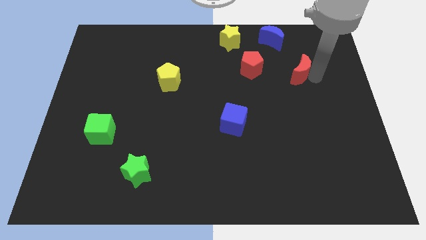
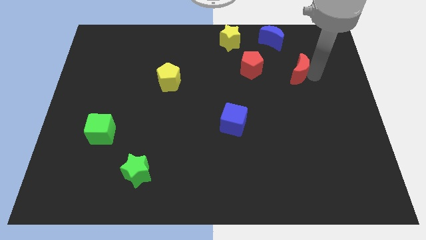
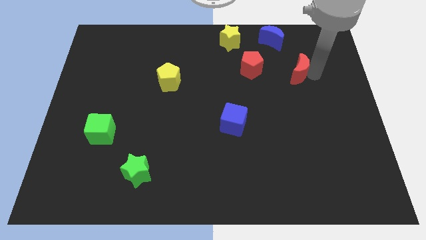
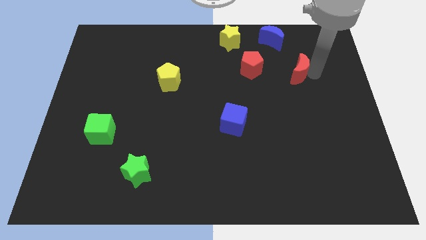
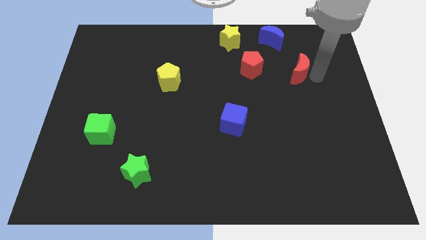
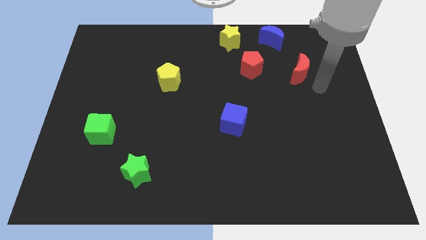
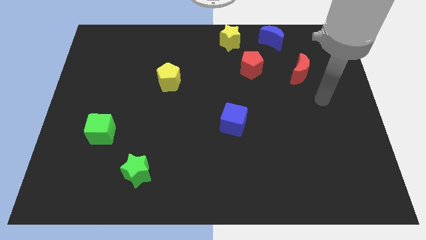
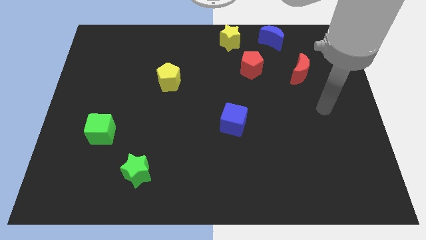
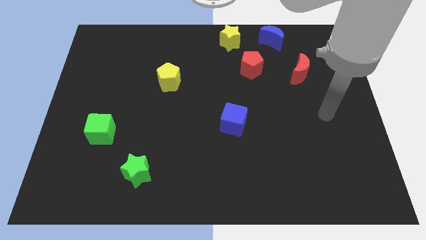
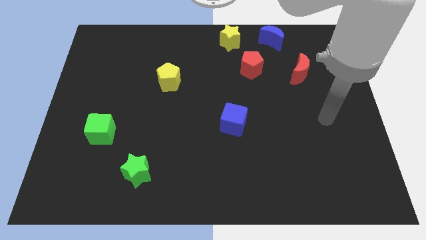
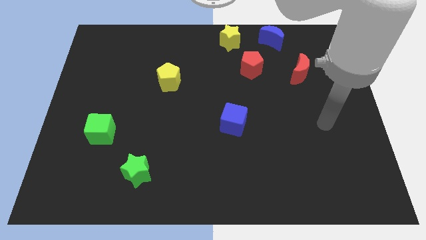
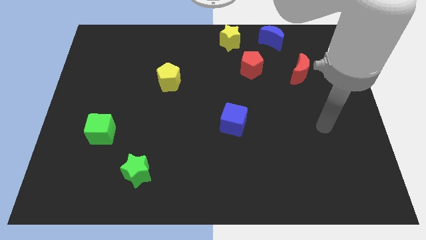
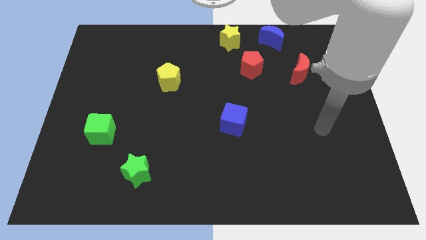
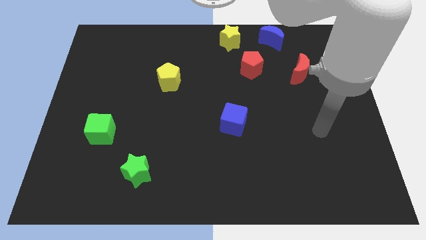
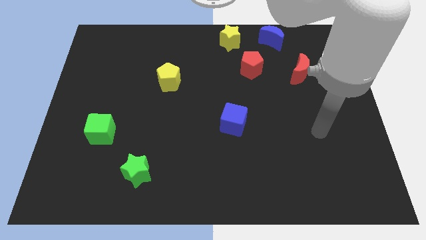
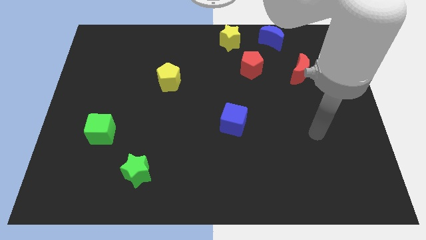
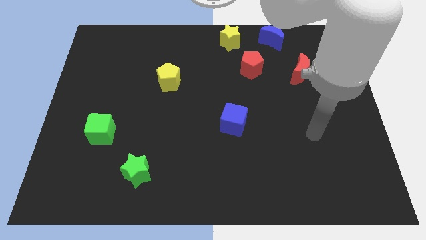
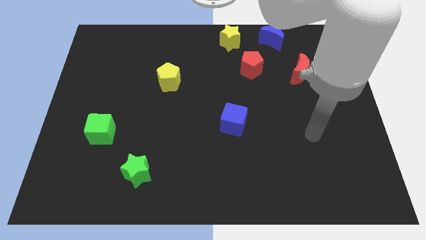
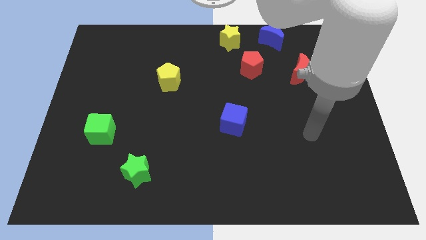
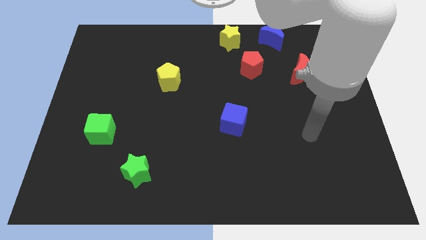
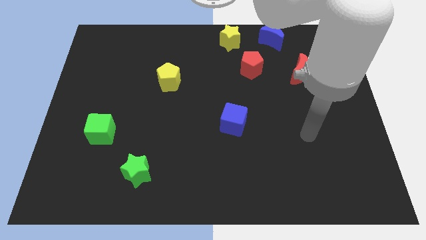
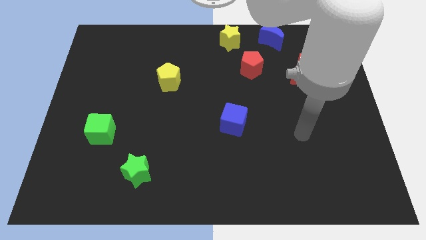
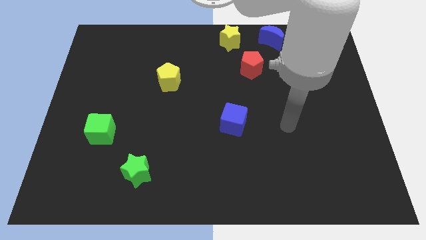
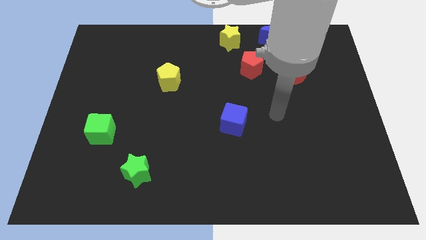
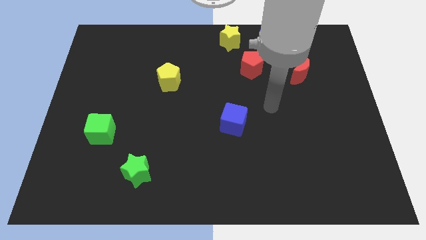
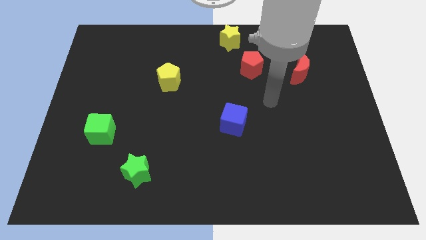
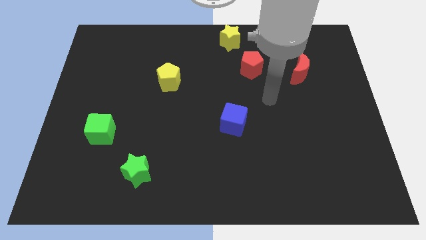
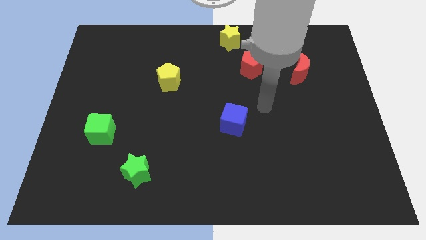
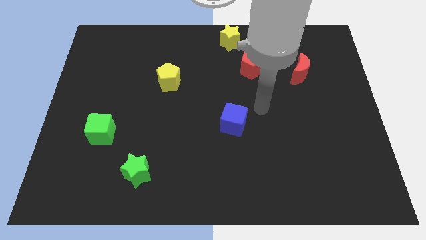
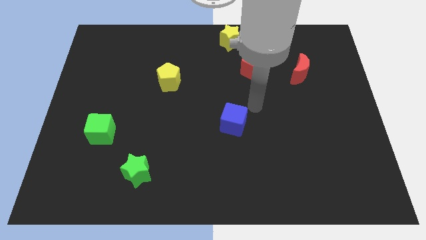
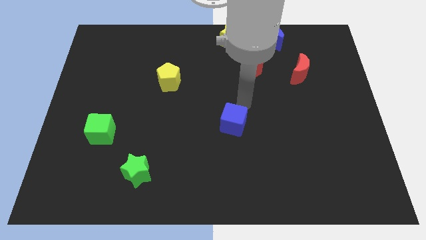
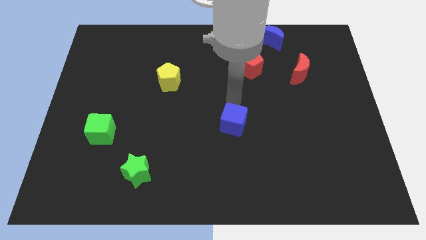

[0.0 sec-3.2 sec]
point your arm at the top of the blue cube

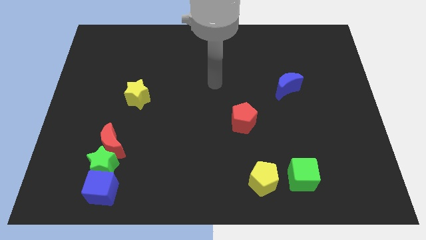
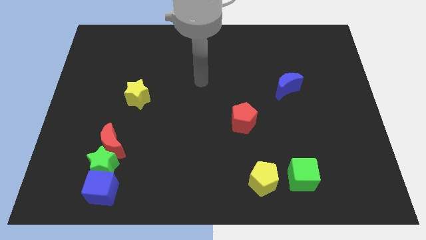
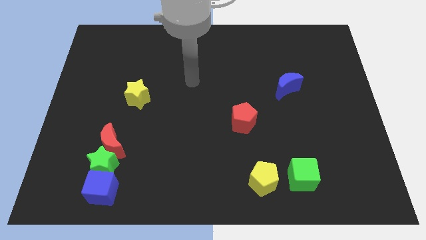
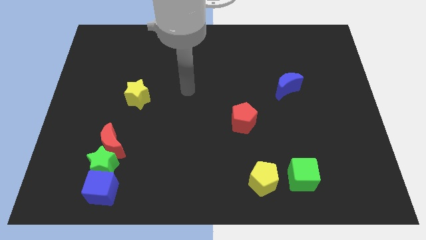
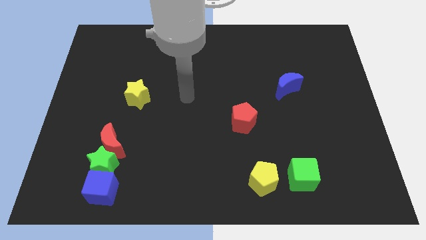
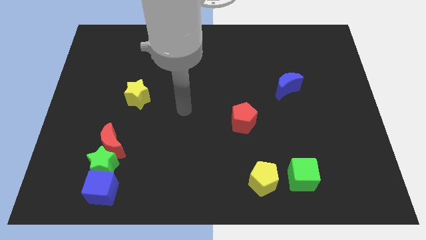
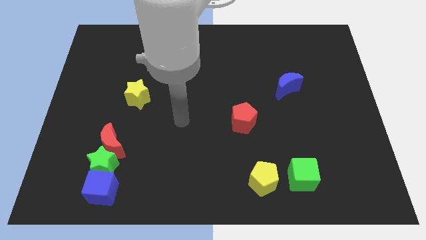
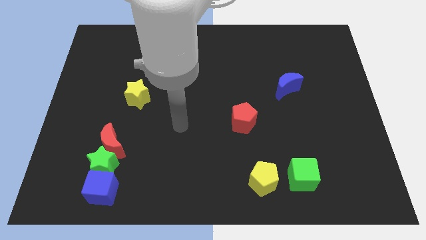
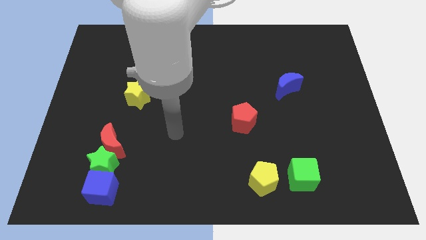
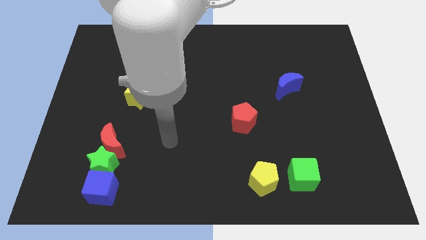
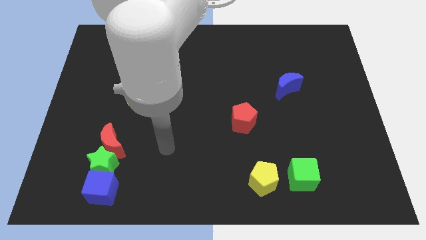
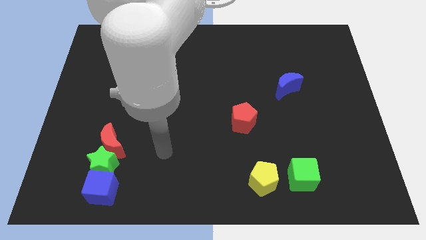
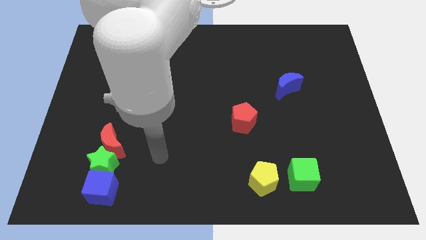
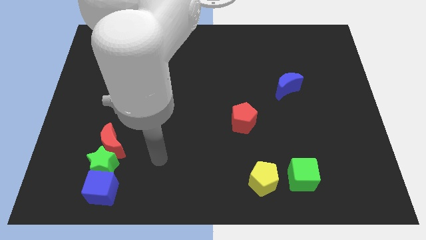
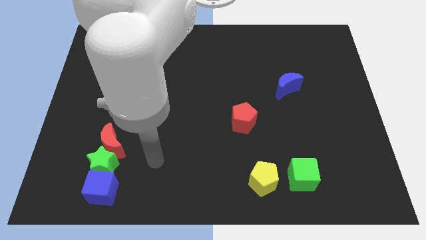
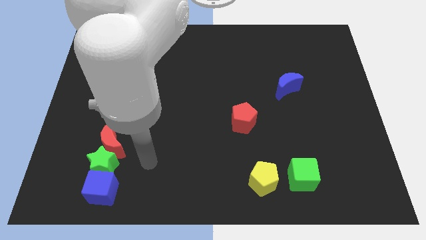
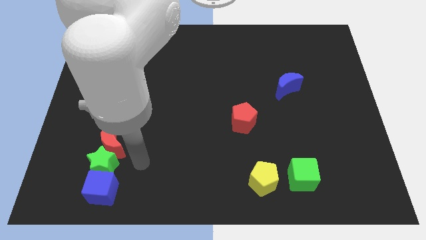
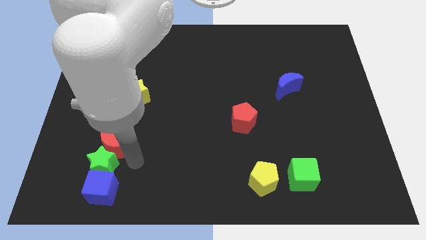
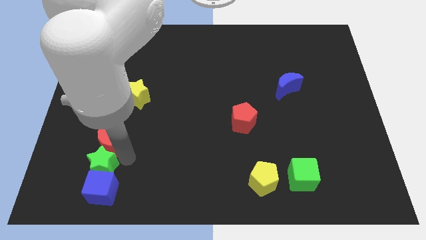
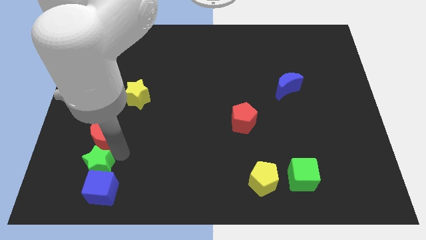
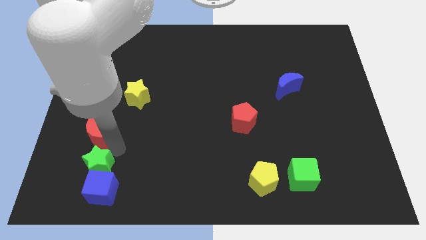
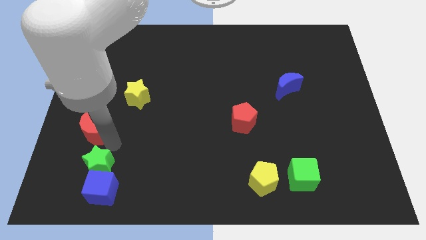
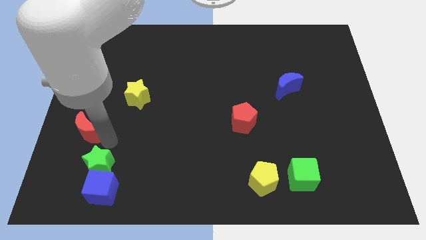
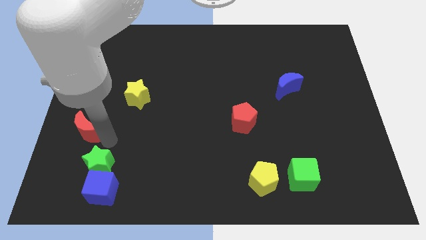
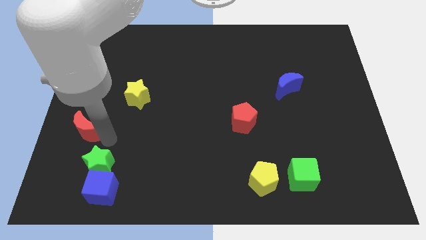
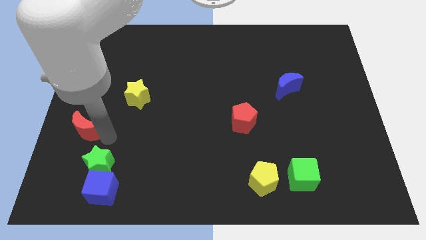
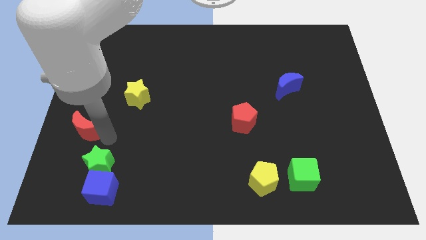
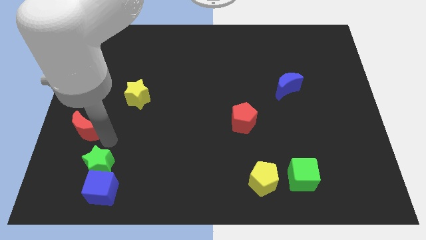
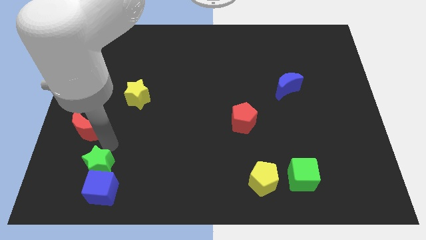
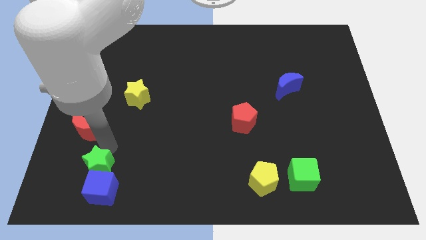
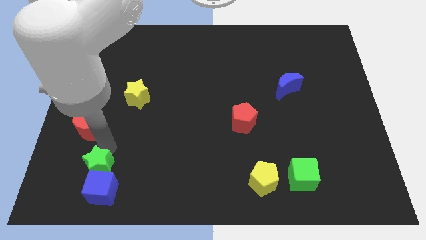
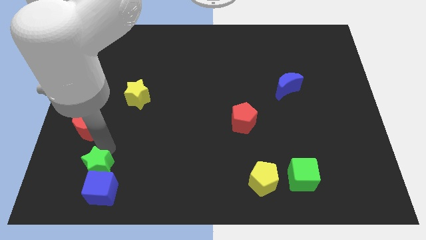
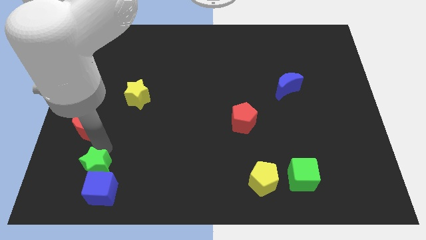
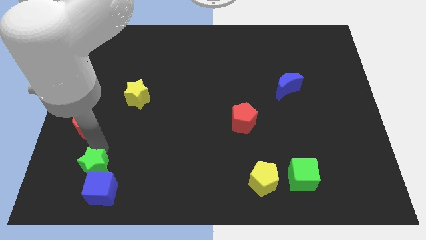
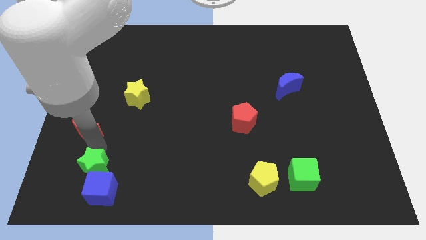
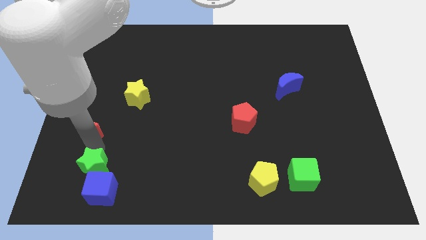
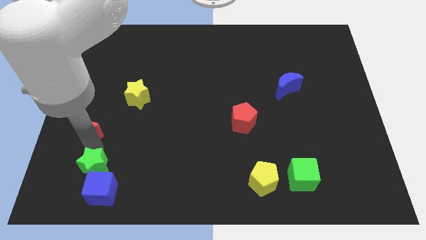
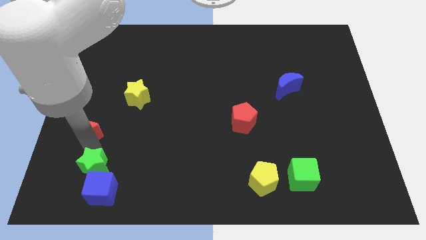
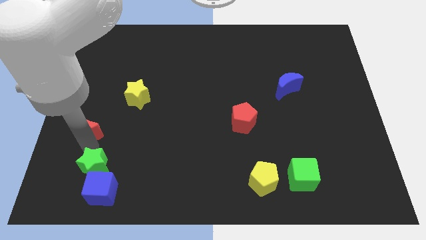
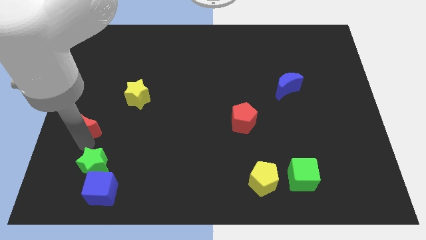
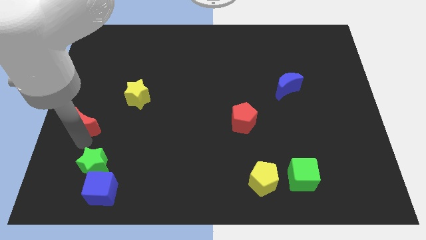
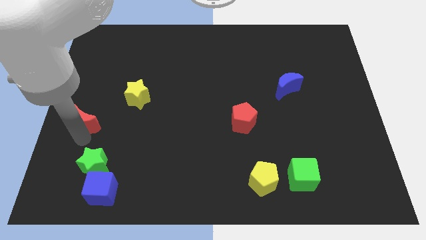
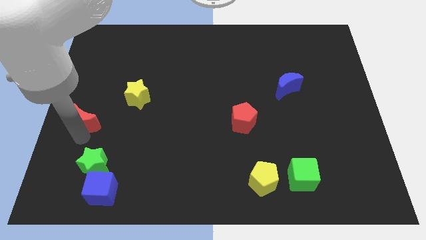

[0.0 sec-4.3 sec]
separate the red crescent from the green star

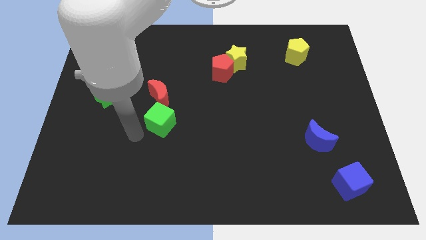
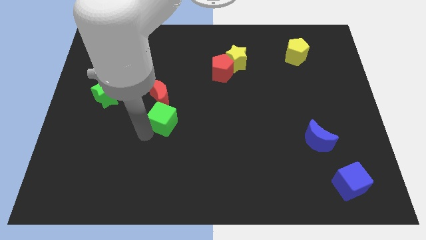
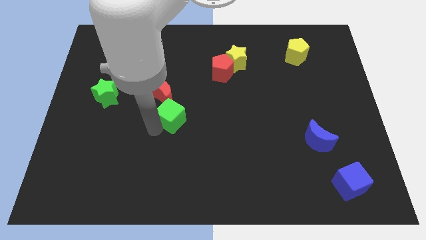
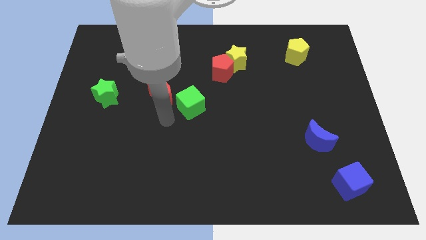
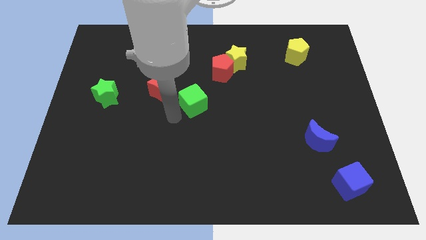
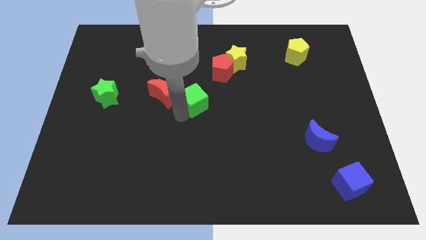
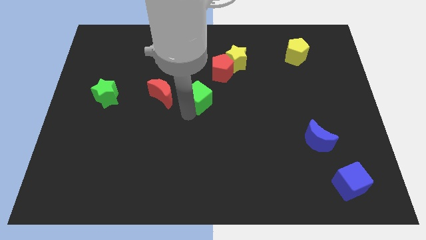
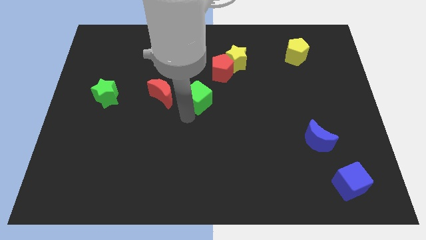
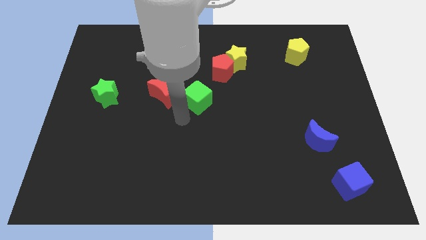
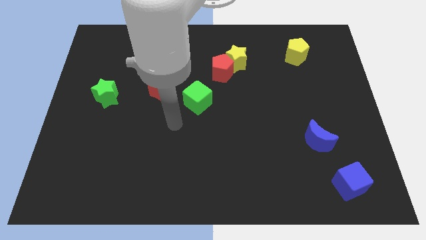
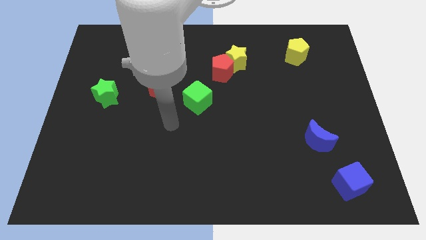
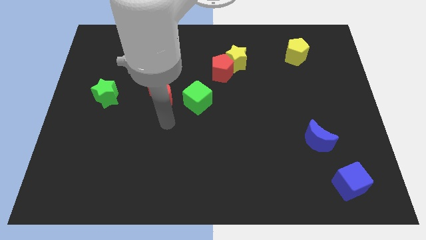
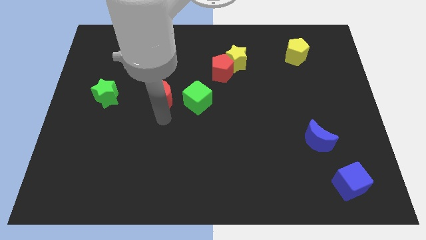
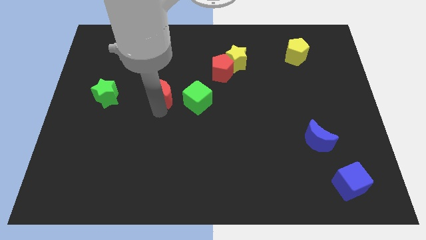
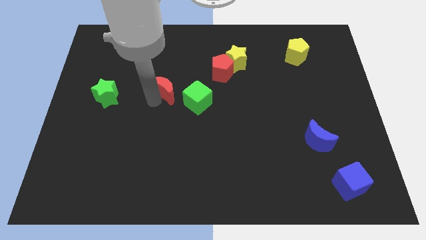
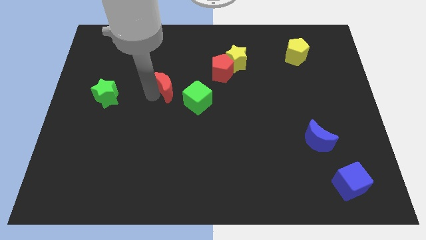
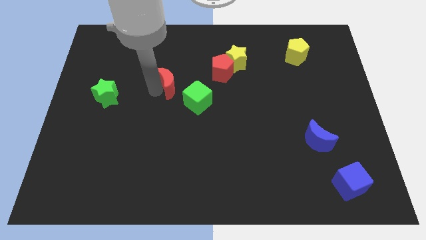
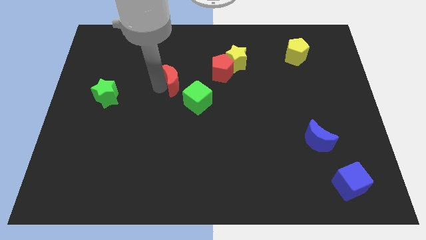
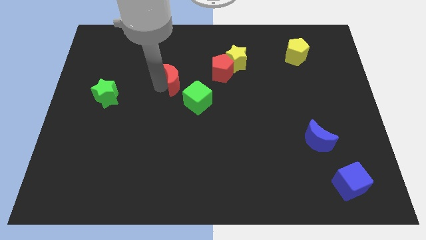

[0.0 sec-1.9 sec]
push green cube to the center of the board
